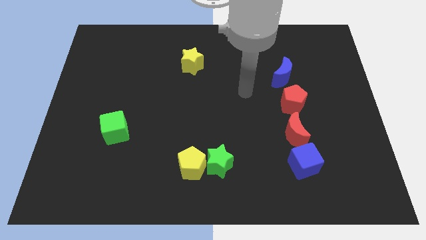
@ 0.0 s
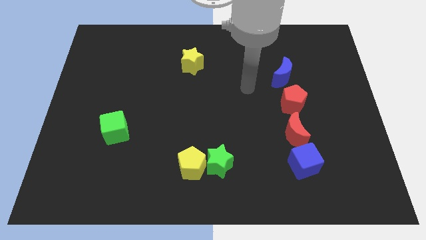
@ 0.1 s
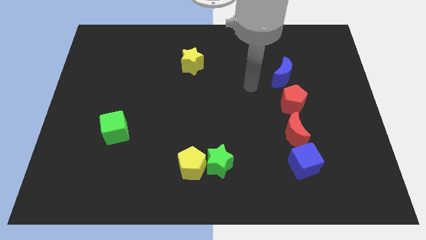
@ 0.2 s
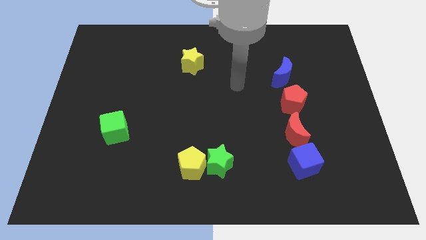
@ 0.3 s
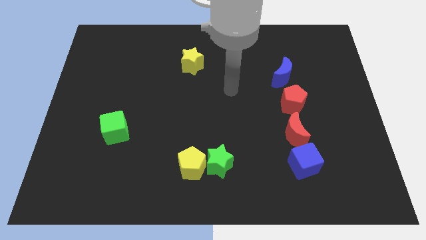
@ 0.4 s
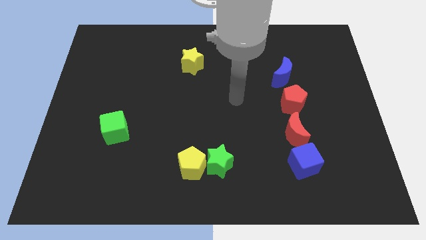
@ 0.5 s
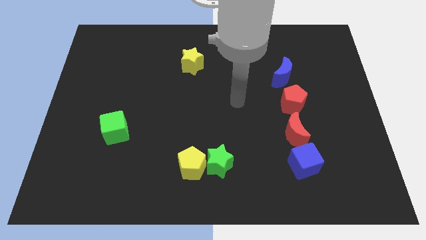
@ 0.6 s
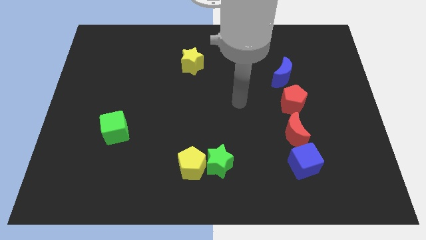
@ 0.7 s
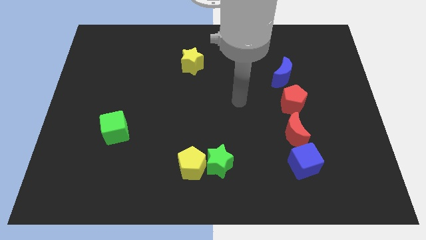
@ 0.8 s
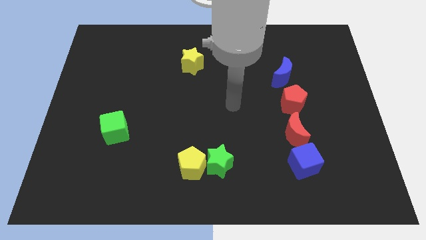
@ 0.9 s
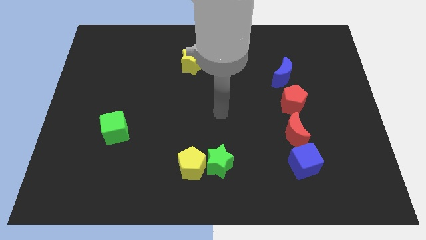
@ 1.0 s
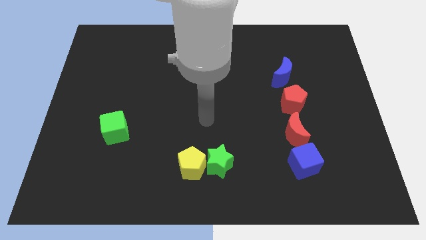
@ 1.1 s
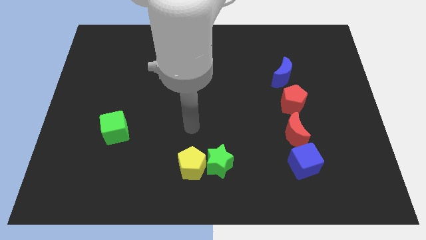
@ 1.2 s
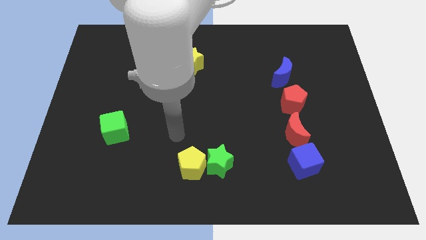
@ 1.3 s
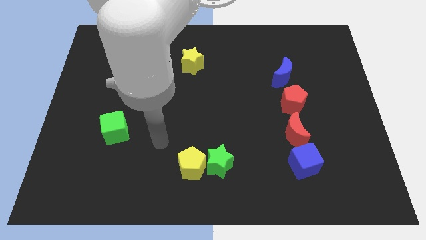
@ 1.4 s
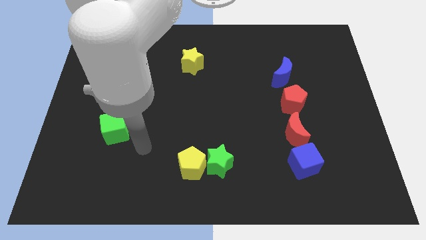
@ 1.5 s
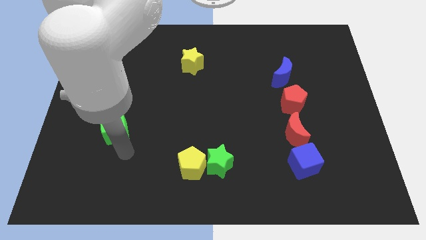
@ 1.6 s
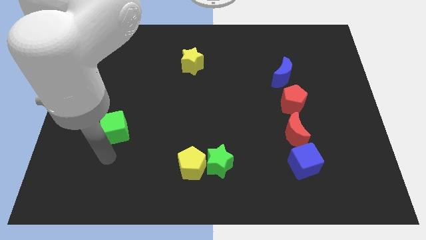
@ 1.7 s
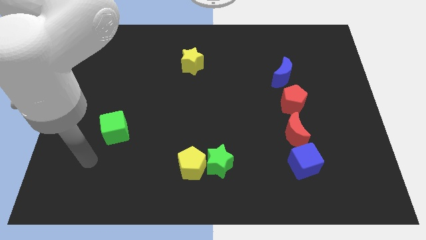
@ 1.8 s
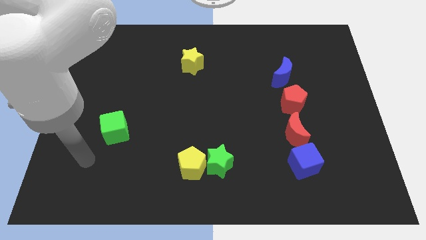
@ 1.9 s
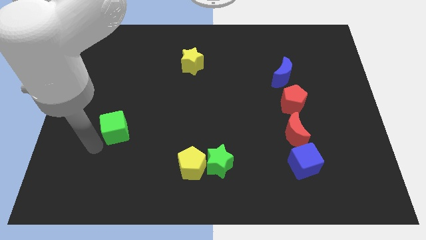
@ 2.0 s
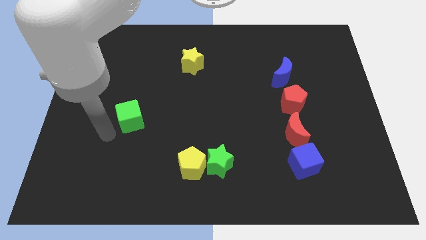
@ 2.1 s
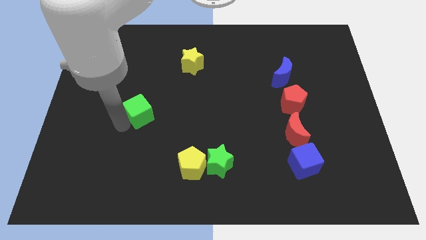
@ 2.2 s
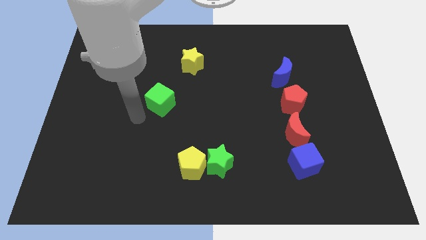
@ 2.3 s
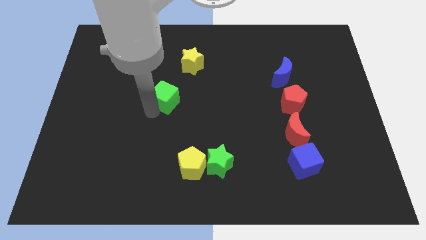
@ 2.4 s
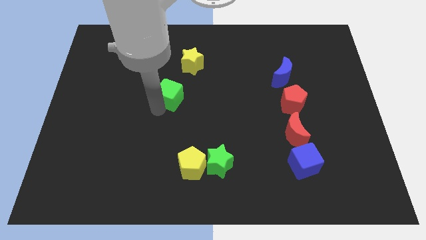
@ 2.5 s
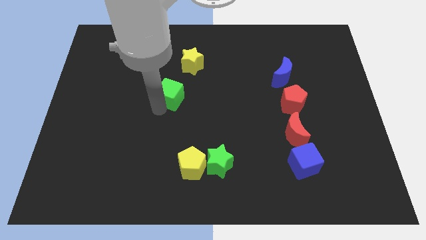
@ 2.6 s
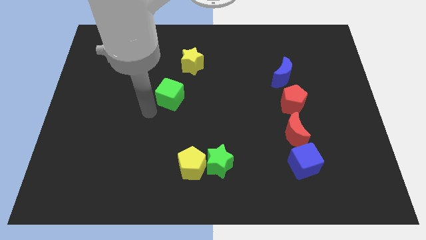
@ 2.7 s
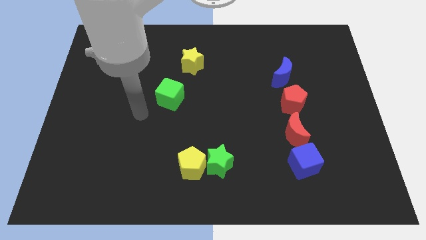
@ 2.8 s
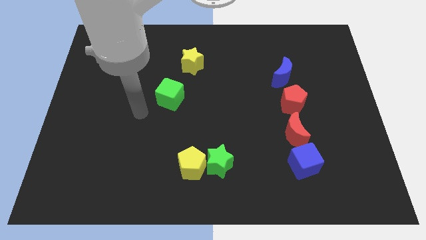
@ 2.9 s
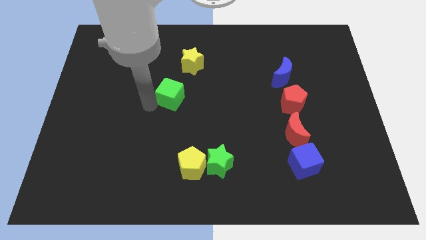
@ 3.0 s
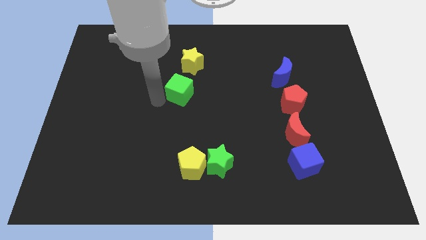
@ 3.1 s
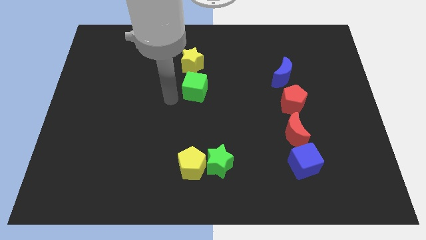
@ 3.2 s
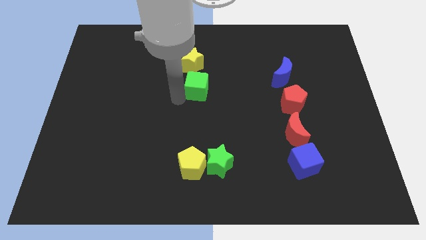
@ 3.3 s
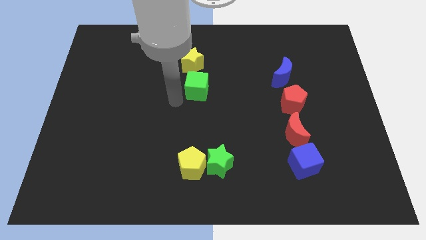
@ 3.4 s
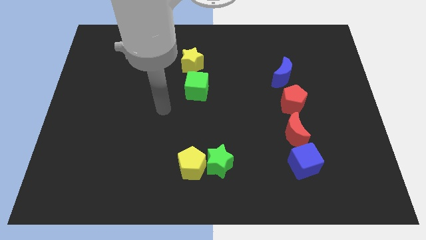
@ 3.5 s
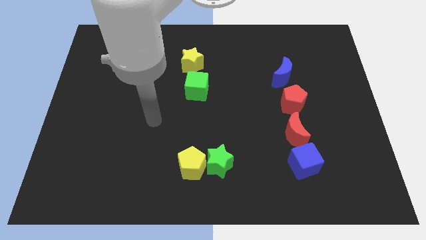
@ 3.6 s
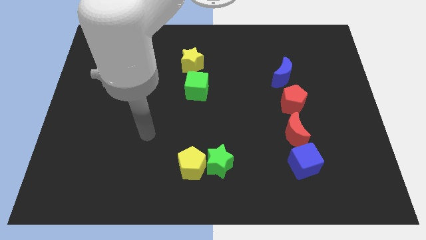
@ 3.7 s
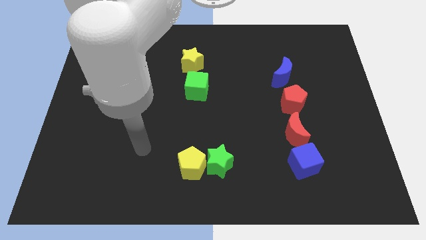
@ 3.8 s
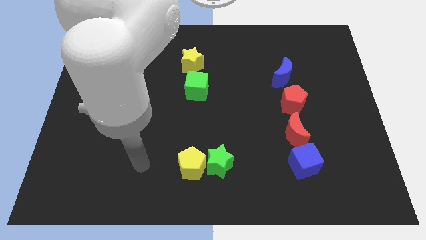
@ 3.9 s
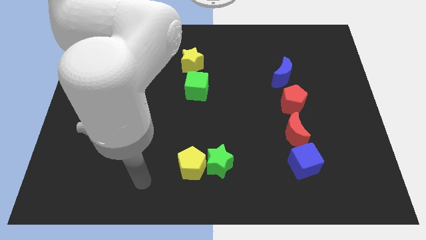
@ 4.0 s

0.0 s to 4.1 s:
place the green cube below the yellow star

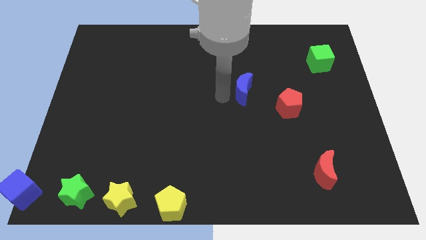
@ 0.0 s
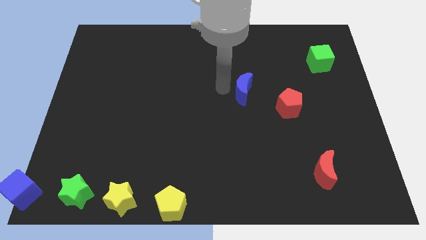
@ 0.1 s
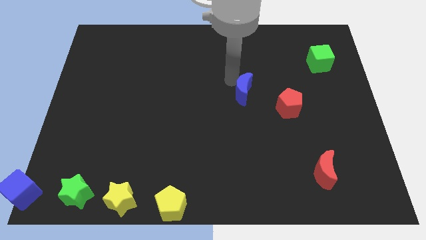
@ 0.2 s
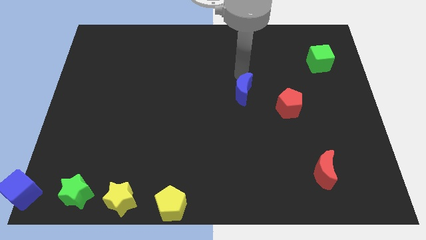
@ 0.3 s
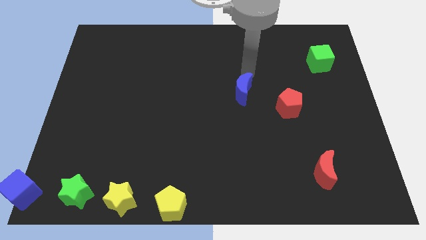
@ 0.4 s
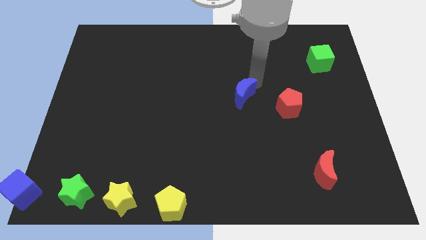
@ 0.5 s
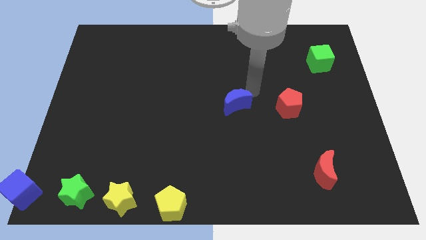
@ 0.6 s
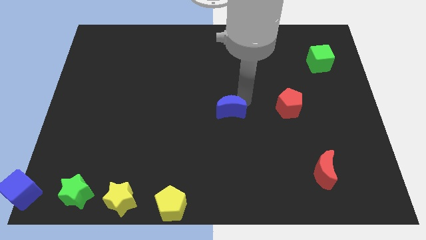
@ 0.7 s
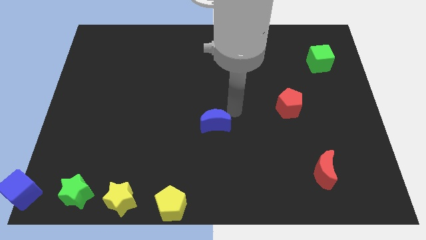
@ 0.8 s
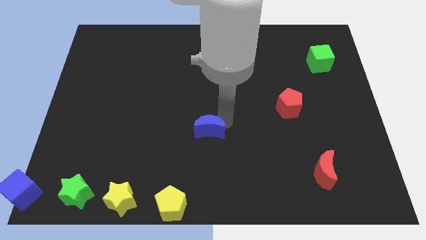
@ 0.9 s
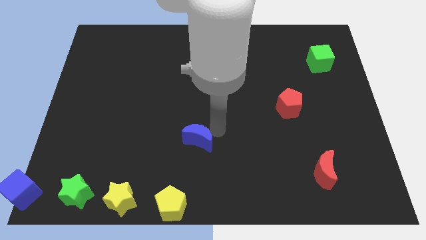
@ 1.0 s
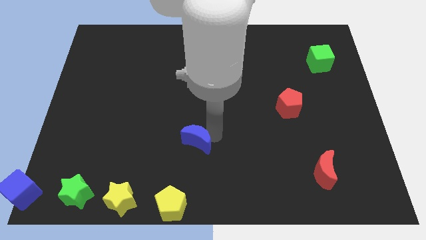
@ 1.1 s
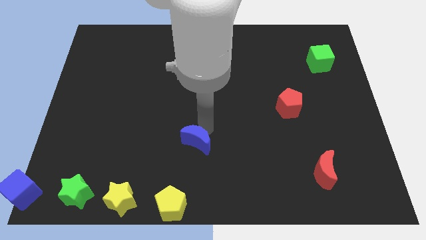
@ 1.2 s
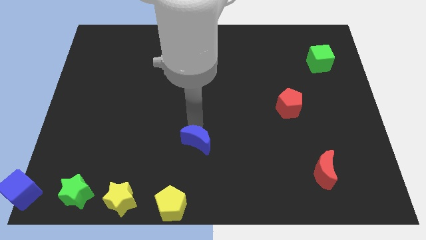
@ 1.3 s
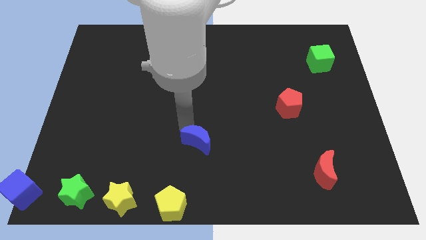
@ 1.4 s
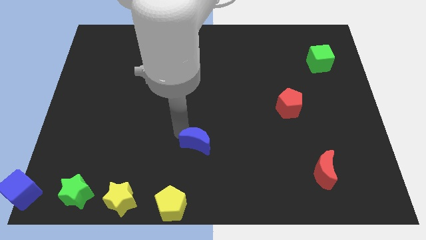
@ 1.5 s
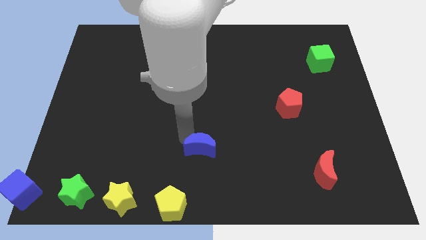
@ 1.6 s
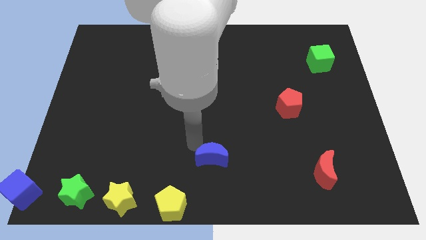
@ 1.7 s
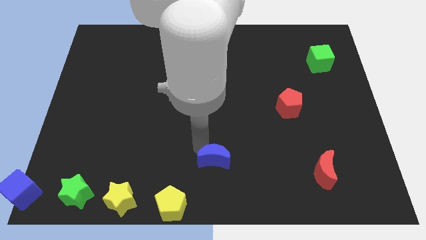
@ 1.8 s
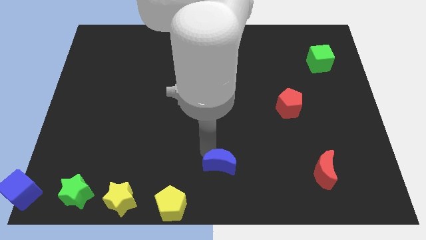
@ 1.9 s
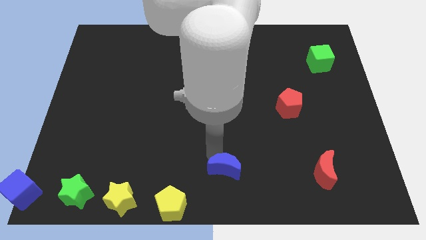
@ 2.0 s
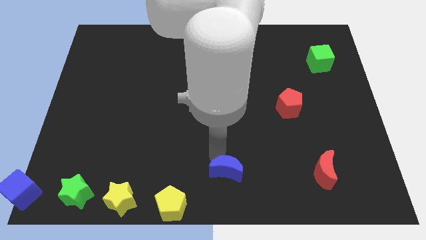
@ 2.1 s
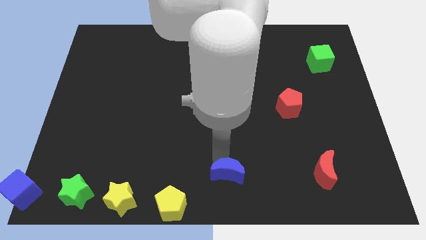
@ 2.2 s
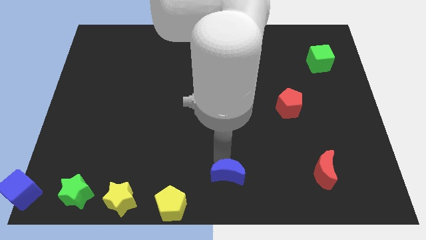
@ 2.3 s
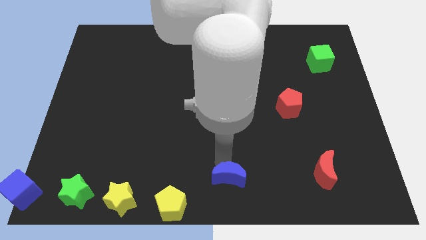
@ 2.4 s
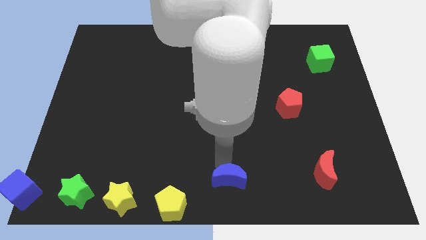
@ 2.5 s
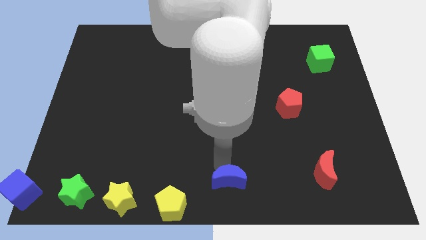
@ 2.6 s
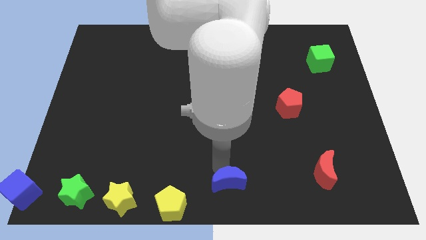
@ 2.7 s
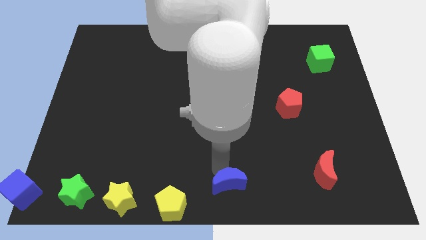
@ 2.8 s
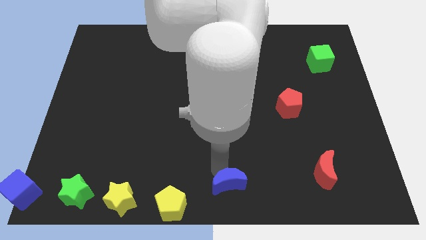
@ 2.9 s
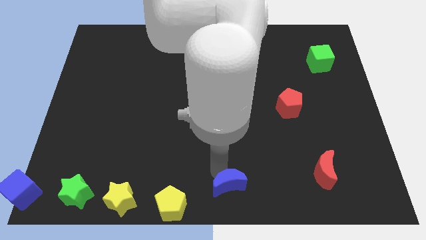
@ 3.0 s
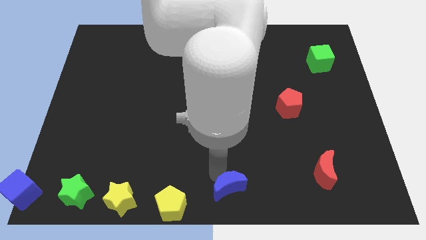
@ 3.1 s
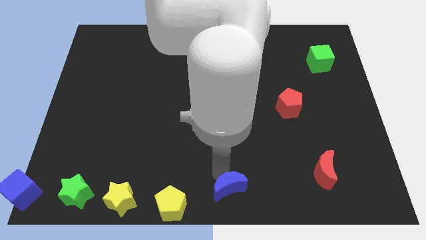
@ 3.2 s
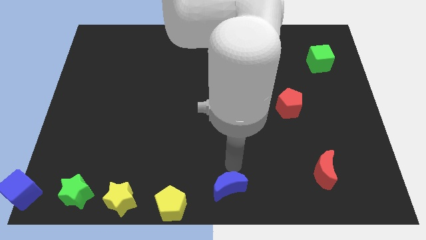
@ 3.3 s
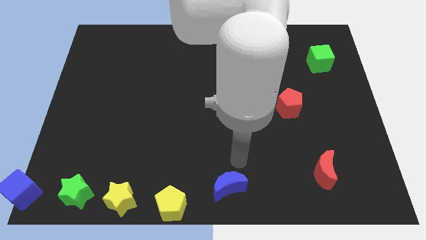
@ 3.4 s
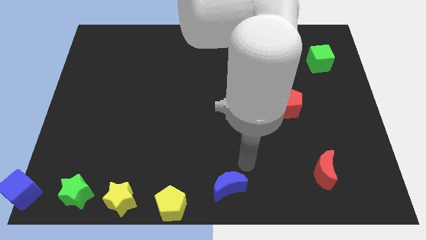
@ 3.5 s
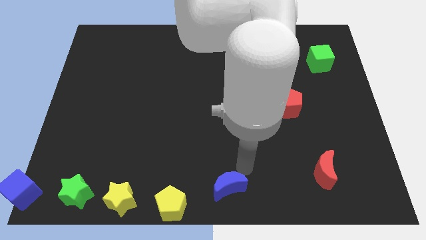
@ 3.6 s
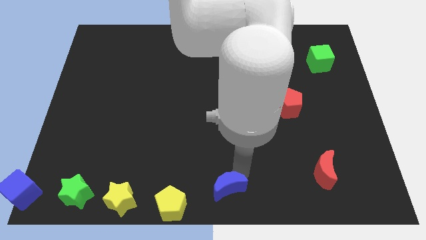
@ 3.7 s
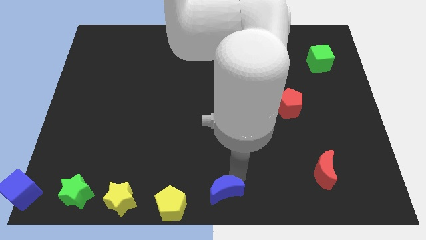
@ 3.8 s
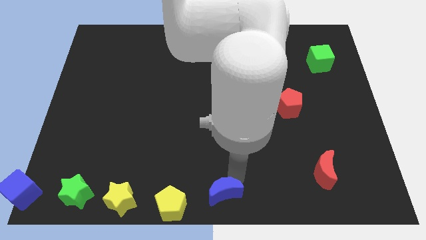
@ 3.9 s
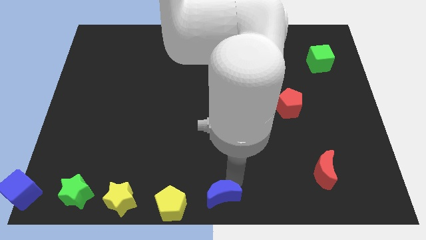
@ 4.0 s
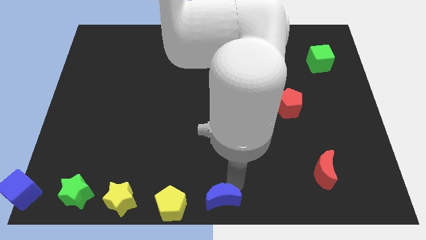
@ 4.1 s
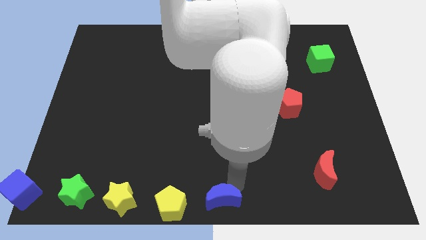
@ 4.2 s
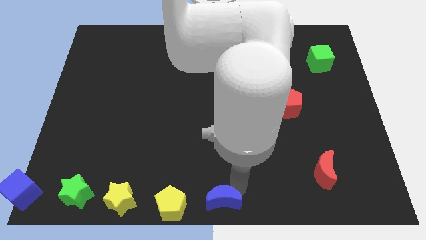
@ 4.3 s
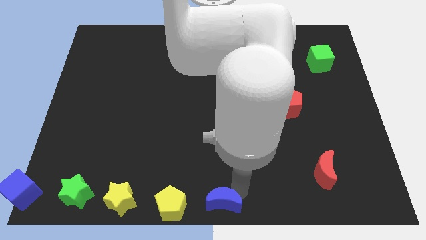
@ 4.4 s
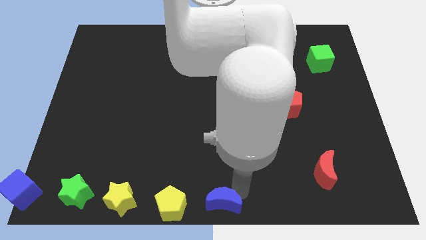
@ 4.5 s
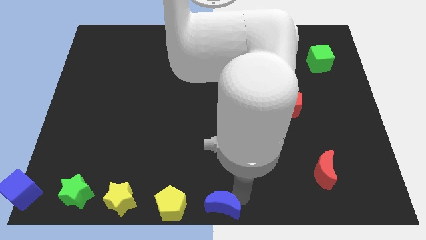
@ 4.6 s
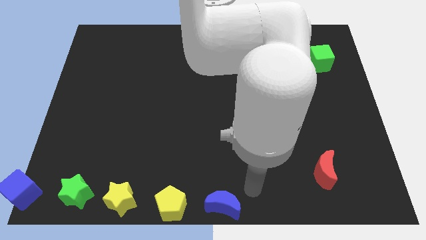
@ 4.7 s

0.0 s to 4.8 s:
move the blue crescent to the right side of the yellow pentagon
